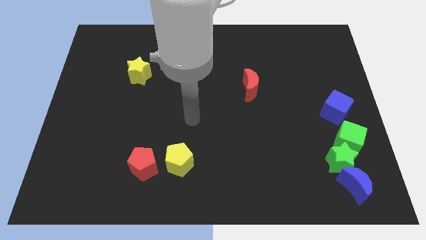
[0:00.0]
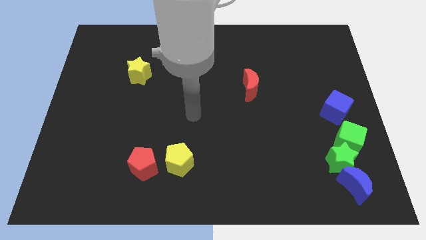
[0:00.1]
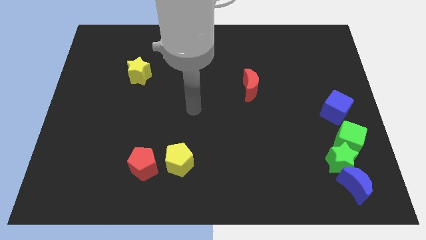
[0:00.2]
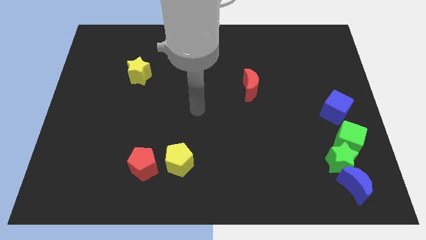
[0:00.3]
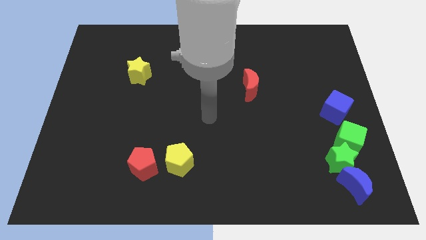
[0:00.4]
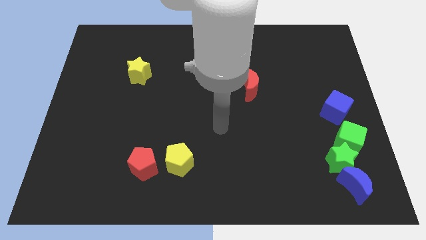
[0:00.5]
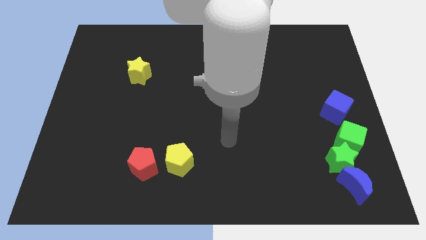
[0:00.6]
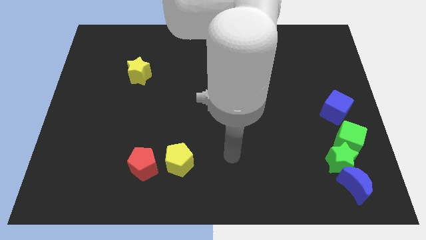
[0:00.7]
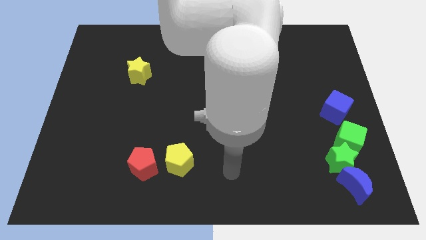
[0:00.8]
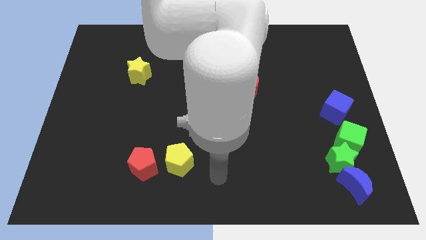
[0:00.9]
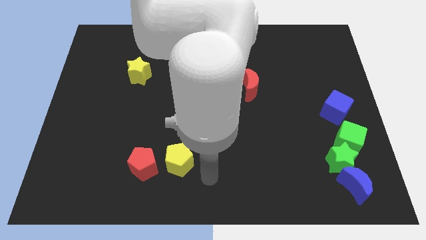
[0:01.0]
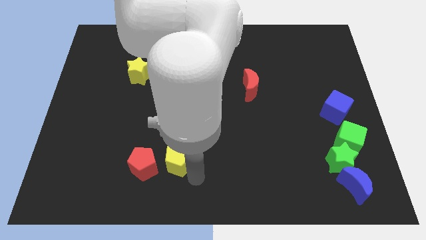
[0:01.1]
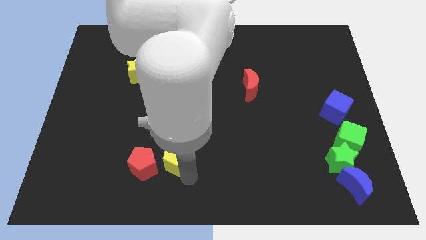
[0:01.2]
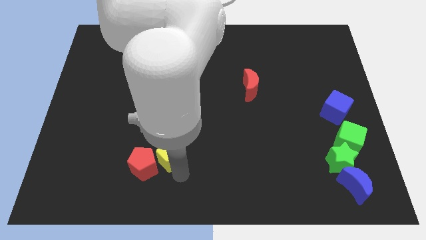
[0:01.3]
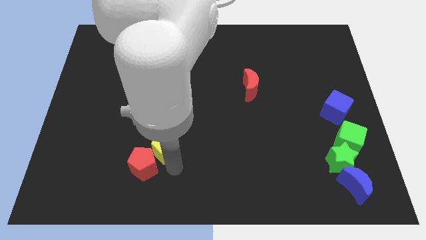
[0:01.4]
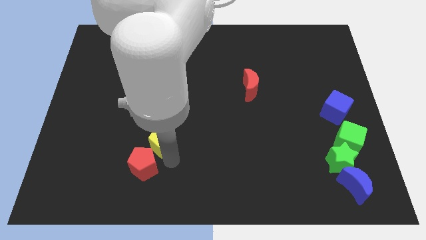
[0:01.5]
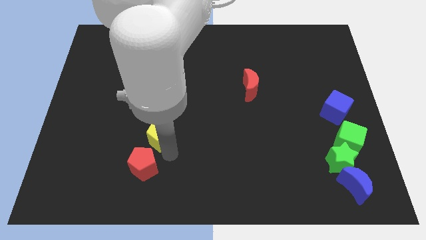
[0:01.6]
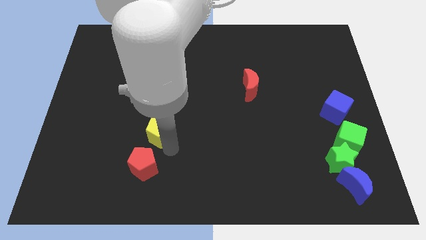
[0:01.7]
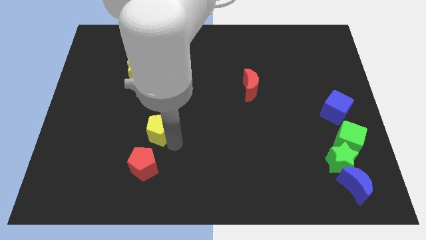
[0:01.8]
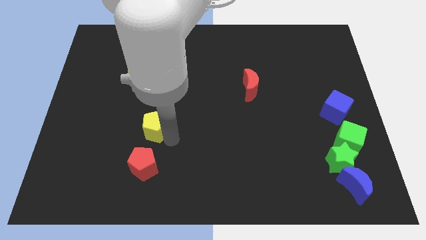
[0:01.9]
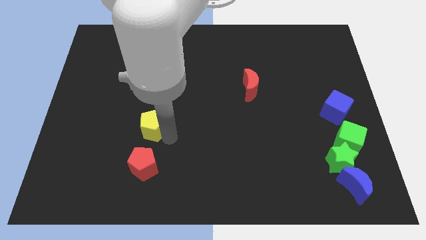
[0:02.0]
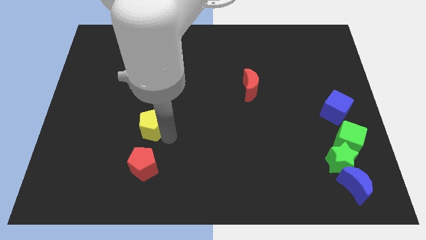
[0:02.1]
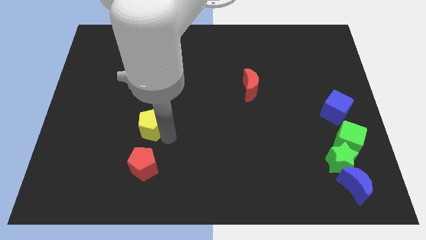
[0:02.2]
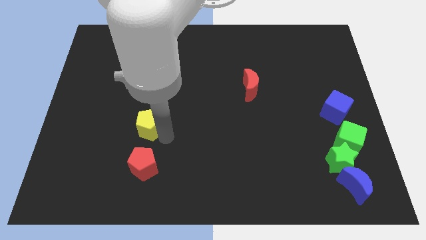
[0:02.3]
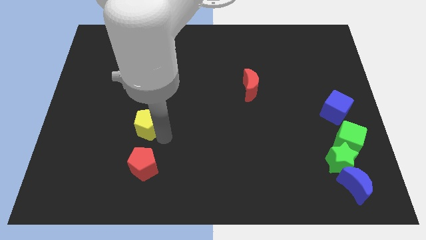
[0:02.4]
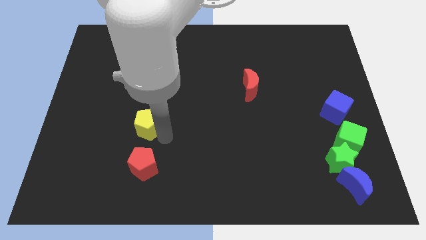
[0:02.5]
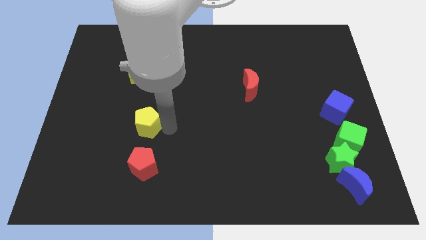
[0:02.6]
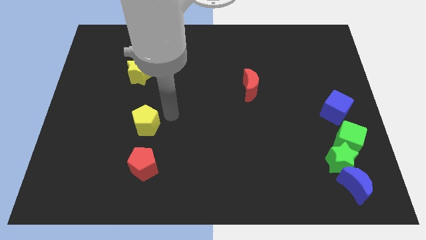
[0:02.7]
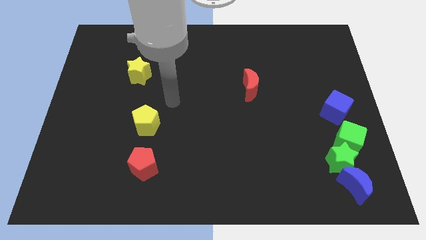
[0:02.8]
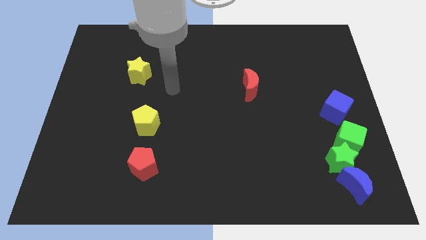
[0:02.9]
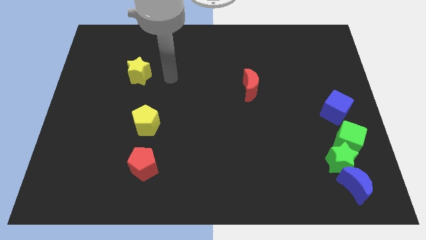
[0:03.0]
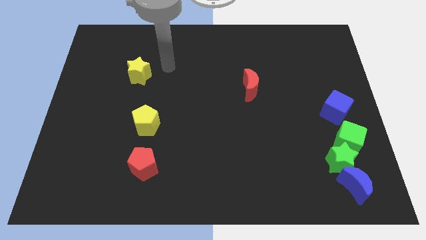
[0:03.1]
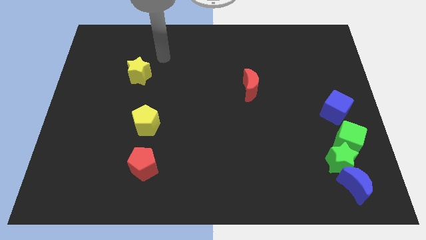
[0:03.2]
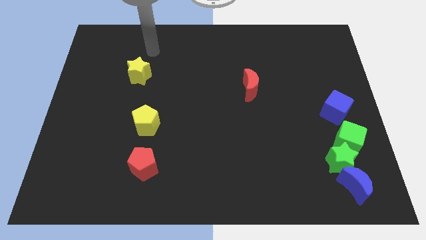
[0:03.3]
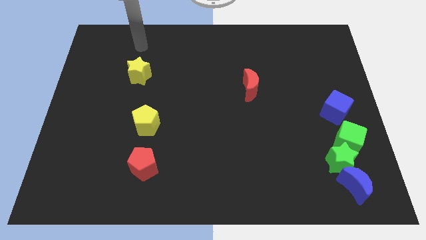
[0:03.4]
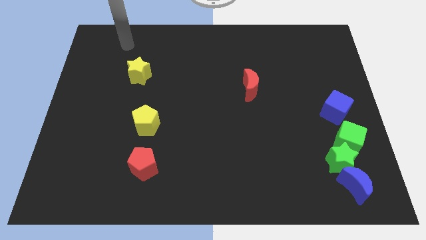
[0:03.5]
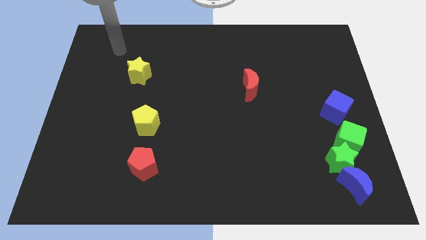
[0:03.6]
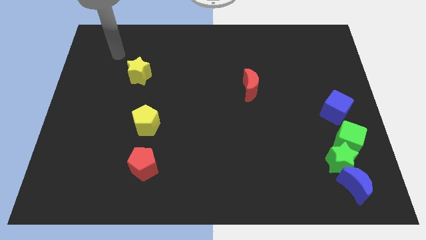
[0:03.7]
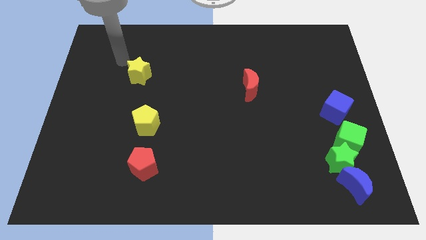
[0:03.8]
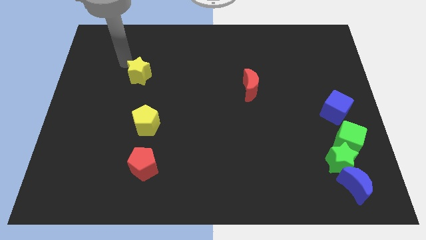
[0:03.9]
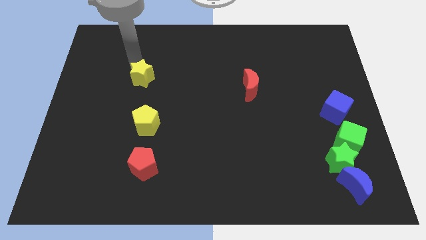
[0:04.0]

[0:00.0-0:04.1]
move yellow pentagon above red pentagon

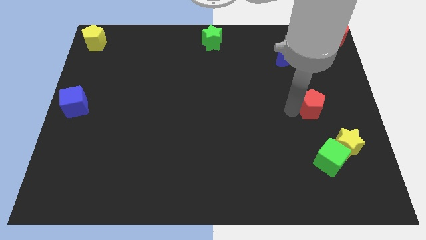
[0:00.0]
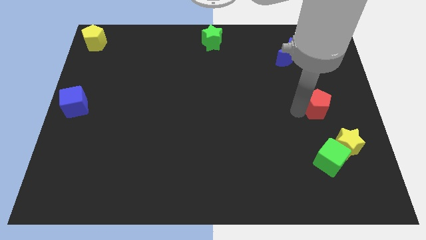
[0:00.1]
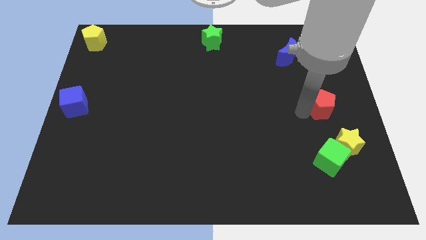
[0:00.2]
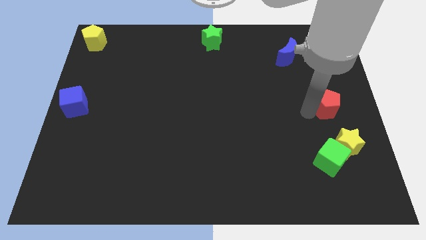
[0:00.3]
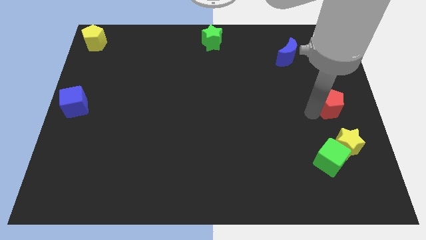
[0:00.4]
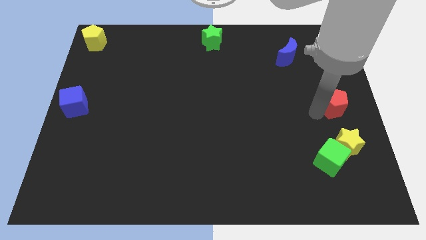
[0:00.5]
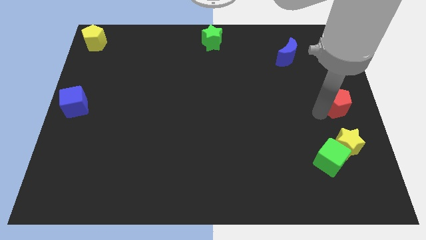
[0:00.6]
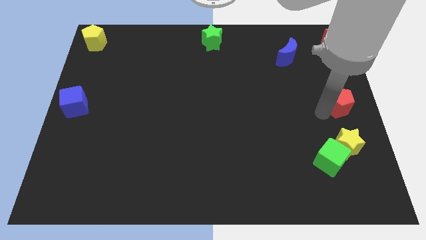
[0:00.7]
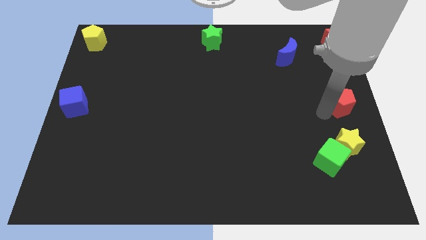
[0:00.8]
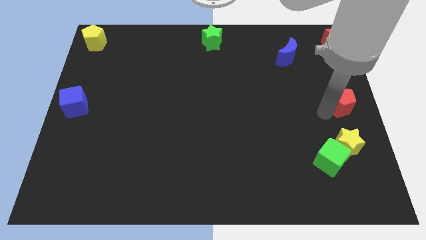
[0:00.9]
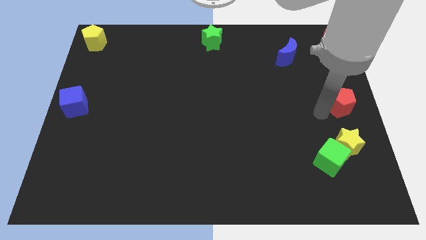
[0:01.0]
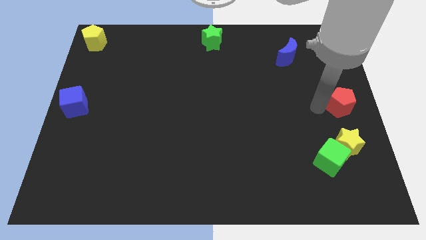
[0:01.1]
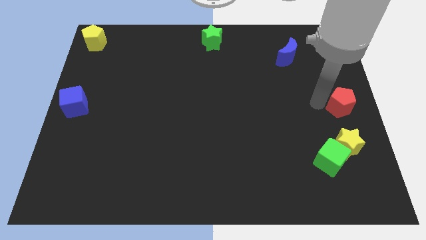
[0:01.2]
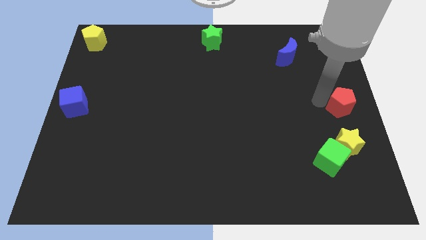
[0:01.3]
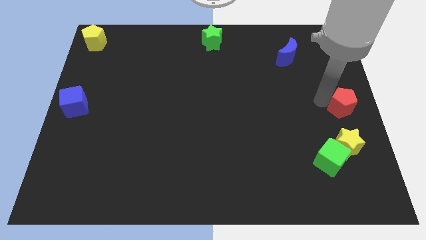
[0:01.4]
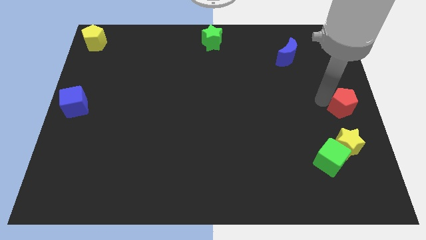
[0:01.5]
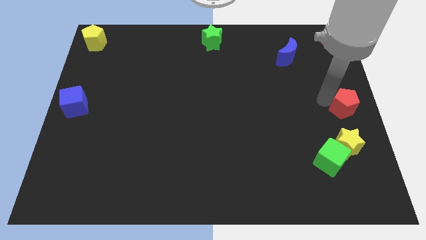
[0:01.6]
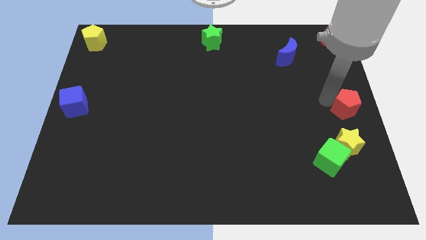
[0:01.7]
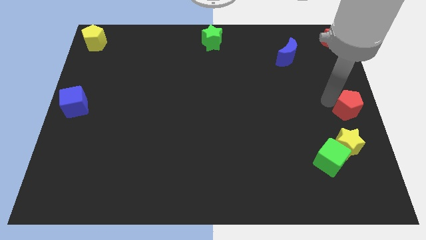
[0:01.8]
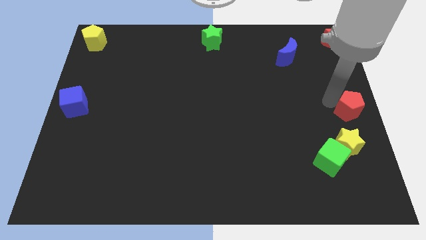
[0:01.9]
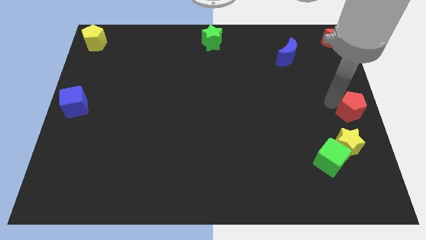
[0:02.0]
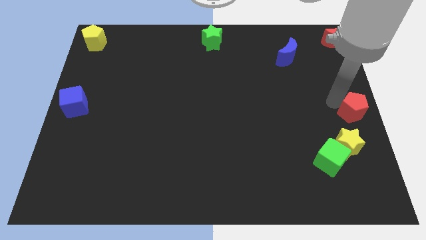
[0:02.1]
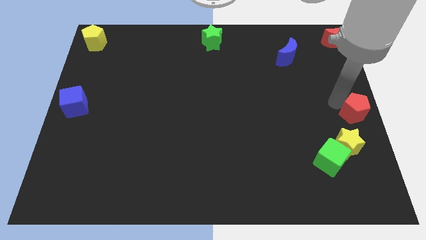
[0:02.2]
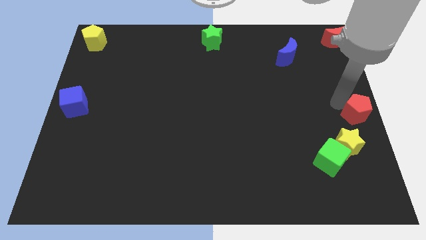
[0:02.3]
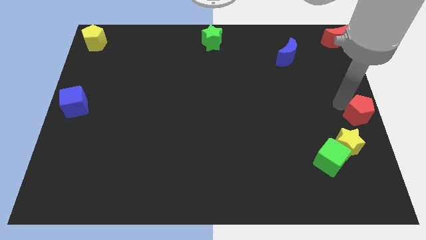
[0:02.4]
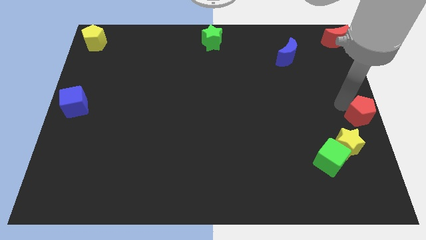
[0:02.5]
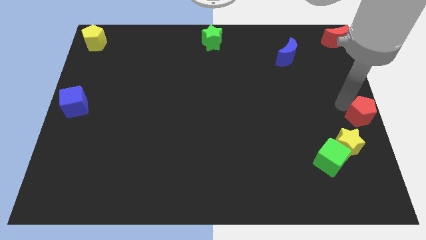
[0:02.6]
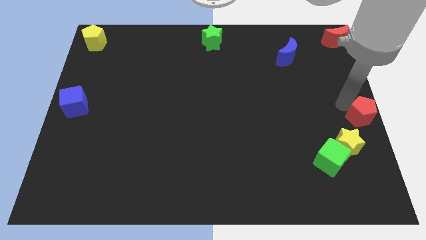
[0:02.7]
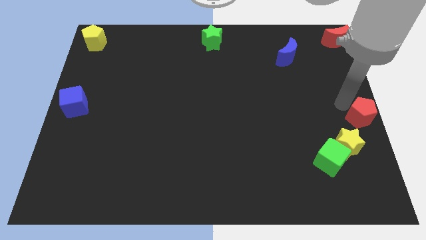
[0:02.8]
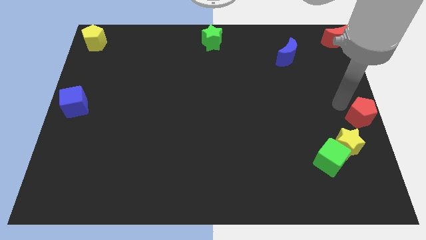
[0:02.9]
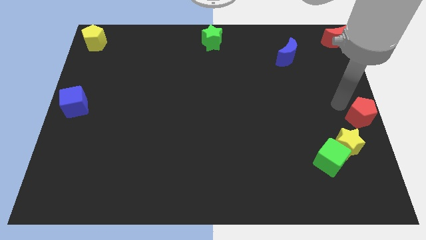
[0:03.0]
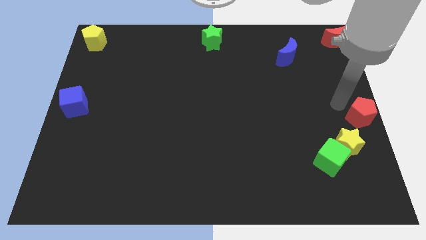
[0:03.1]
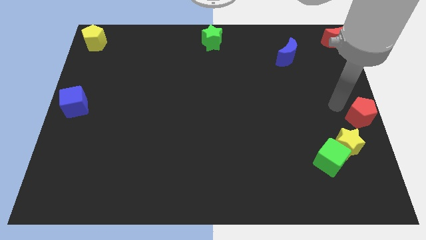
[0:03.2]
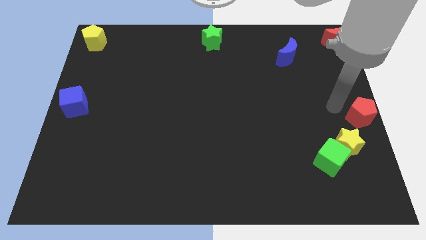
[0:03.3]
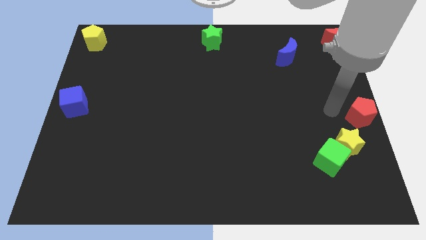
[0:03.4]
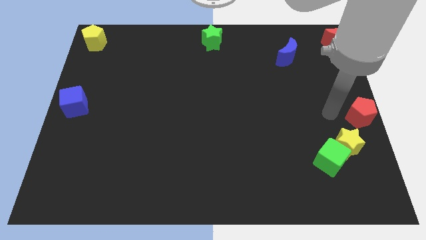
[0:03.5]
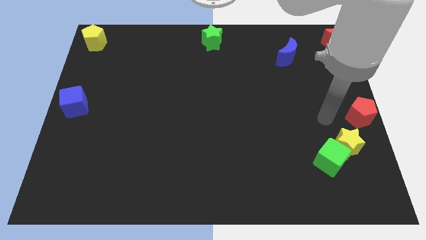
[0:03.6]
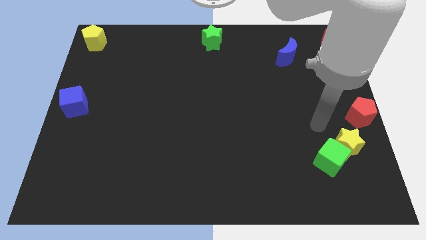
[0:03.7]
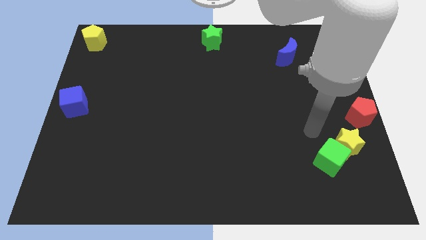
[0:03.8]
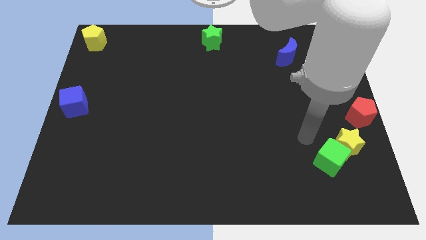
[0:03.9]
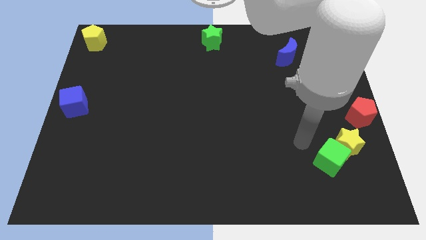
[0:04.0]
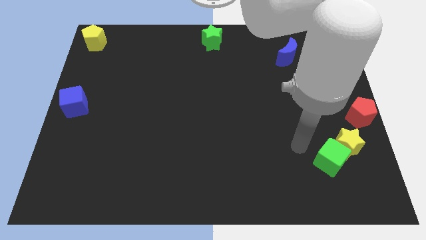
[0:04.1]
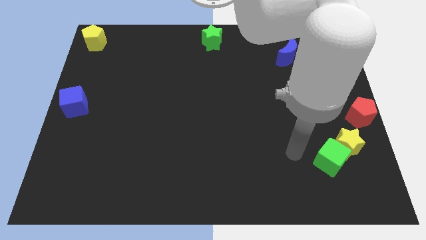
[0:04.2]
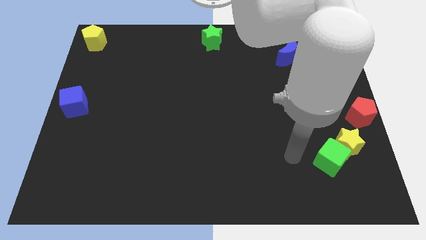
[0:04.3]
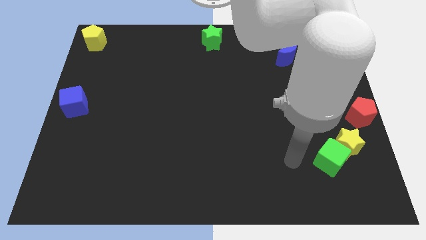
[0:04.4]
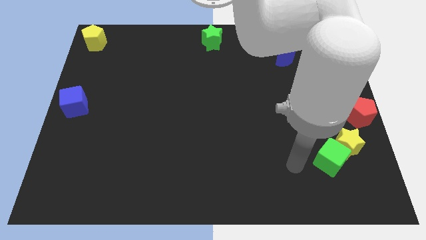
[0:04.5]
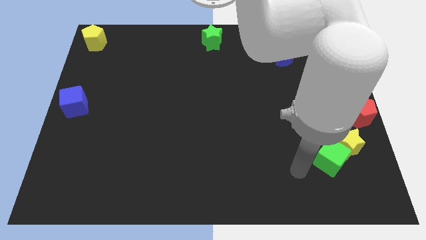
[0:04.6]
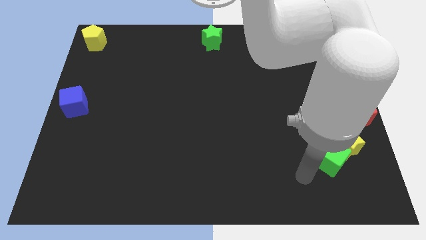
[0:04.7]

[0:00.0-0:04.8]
move the red pentagon to the centre right of the board
